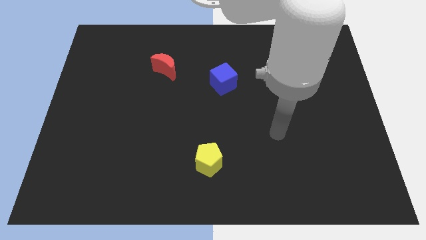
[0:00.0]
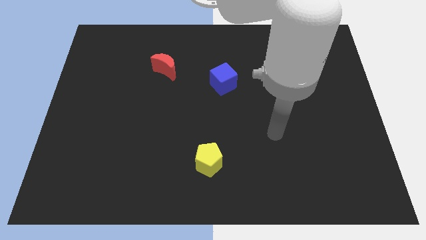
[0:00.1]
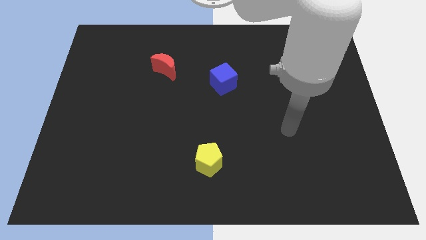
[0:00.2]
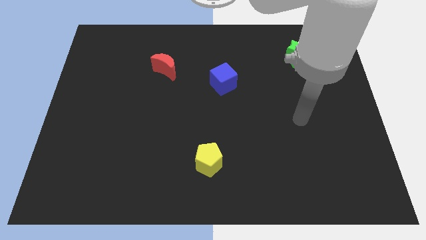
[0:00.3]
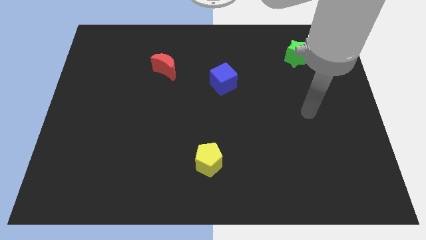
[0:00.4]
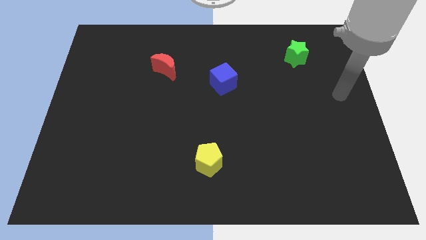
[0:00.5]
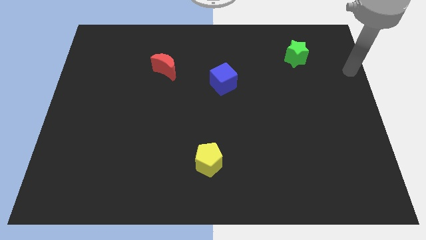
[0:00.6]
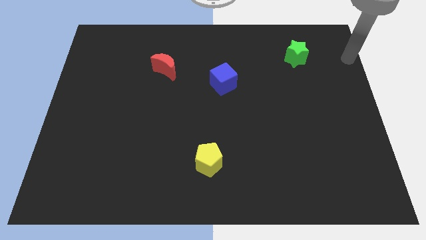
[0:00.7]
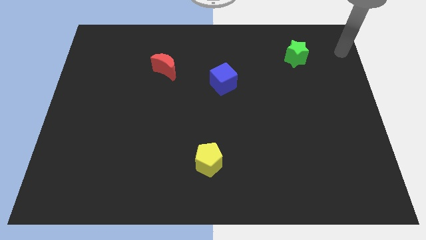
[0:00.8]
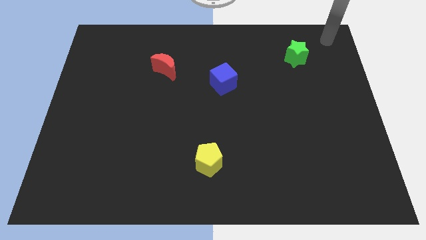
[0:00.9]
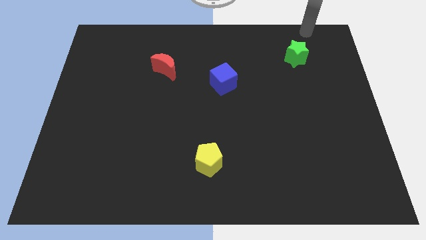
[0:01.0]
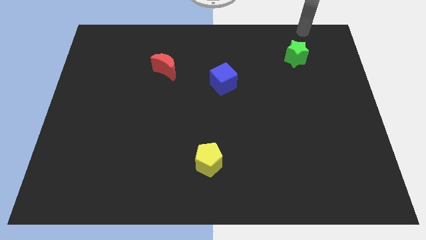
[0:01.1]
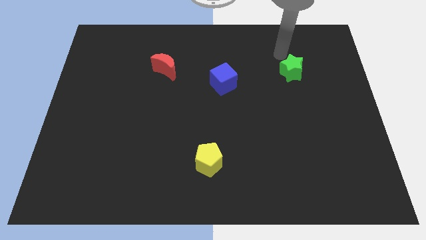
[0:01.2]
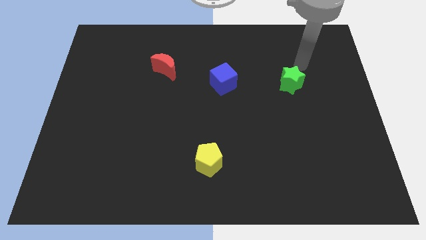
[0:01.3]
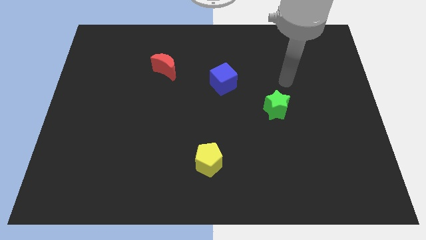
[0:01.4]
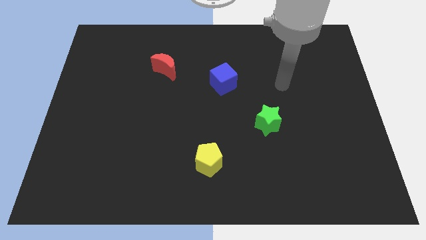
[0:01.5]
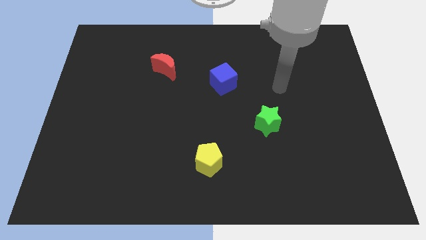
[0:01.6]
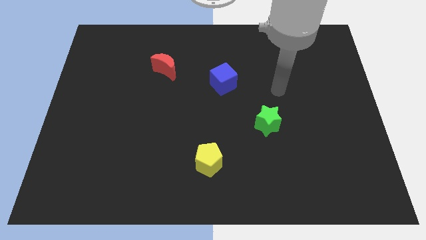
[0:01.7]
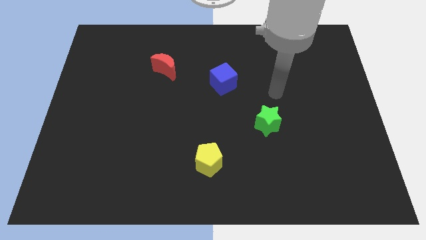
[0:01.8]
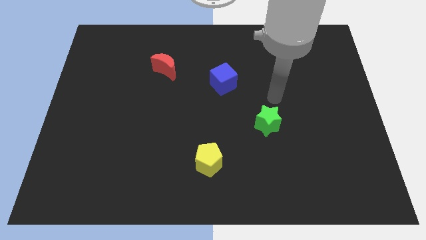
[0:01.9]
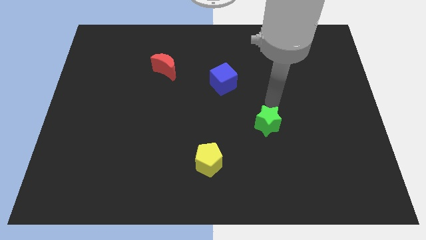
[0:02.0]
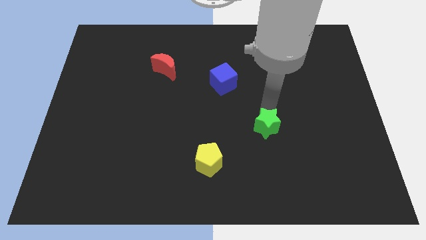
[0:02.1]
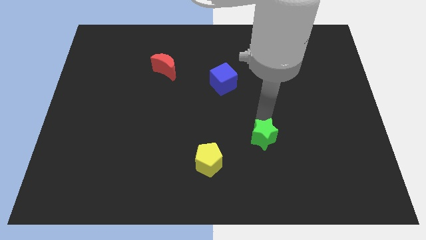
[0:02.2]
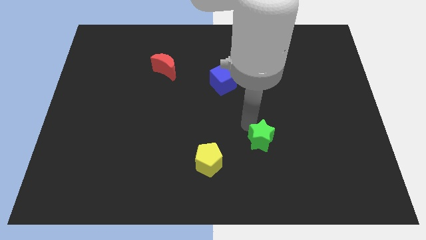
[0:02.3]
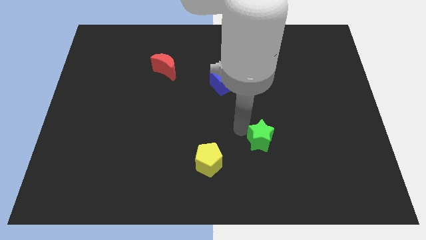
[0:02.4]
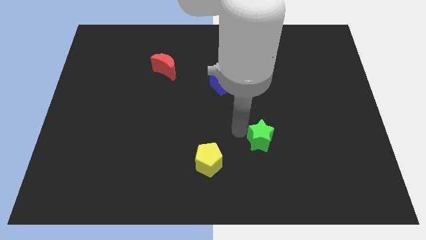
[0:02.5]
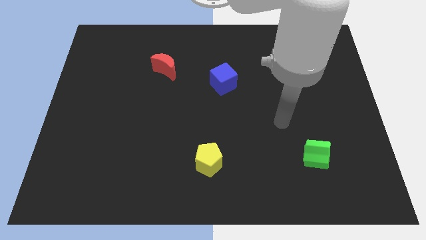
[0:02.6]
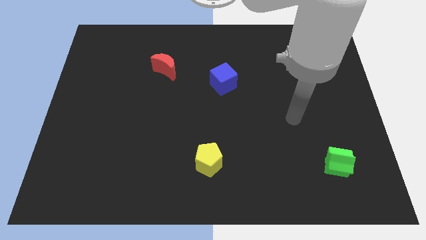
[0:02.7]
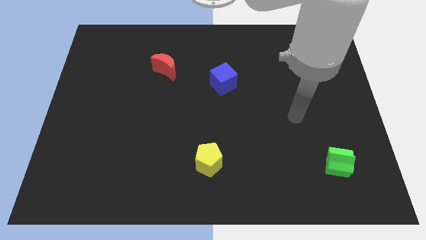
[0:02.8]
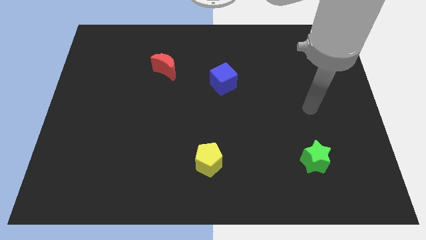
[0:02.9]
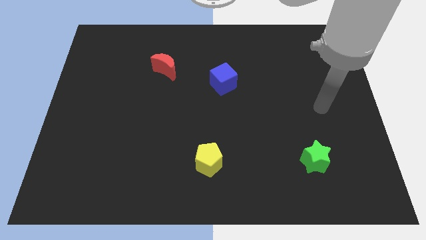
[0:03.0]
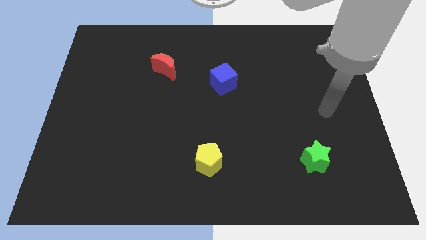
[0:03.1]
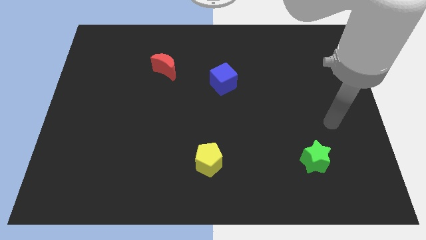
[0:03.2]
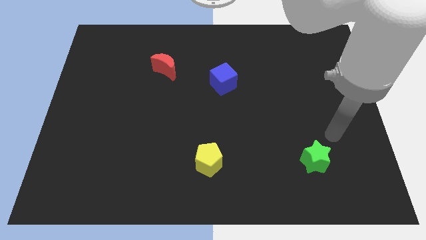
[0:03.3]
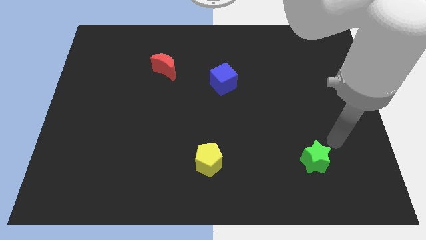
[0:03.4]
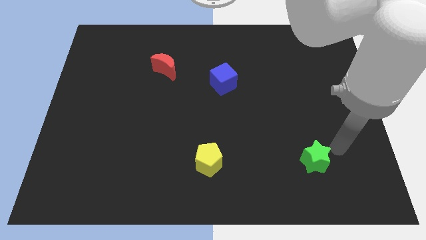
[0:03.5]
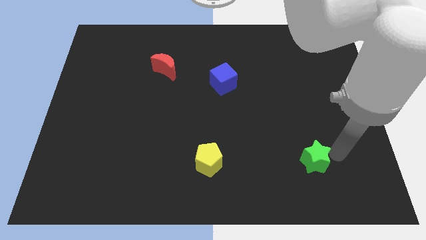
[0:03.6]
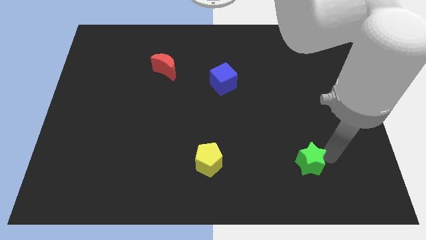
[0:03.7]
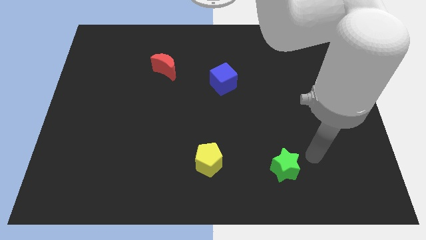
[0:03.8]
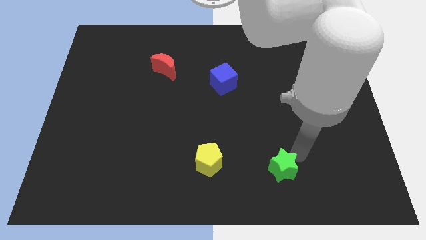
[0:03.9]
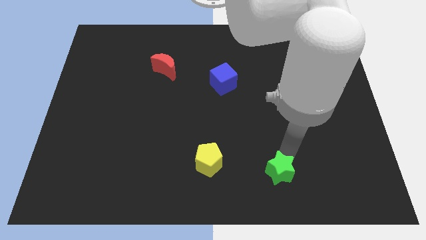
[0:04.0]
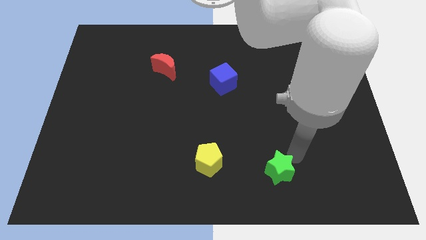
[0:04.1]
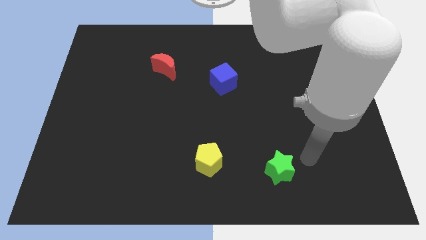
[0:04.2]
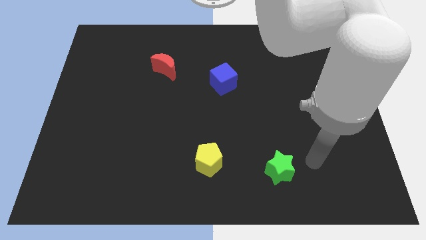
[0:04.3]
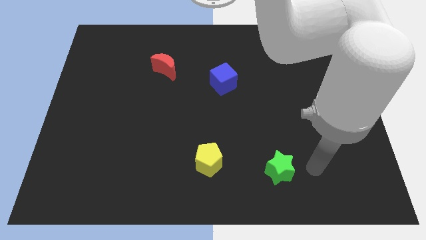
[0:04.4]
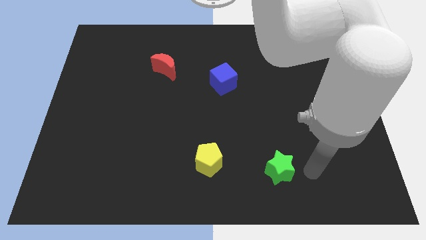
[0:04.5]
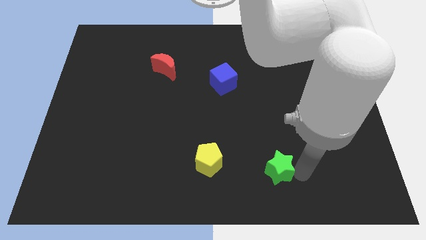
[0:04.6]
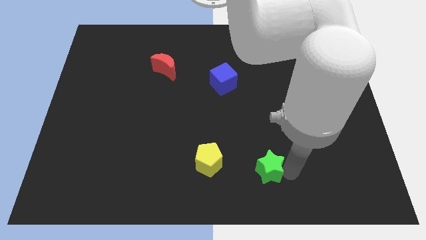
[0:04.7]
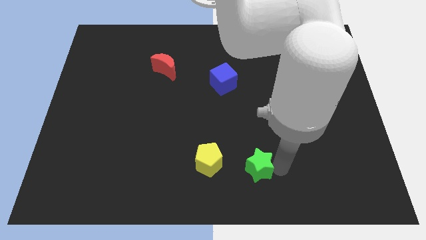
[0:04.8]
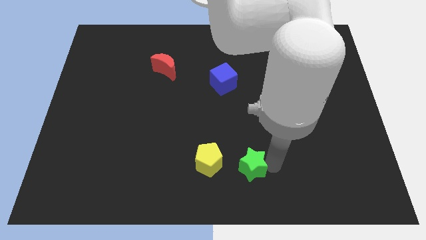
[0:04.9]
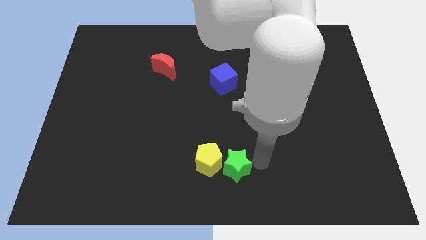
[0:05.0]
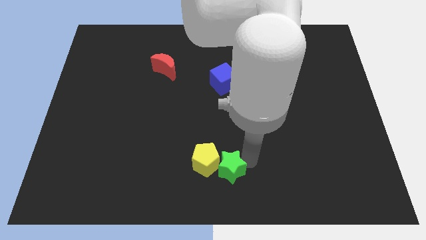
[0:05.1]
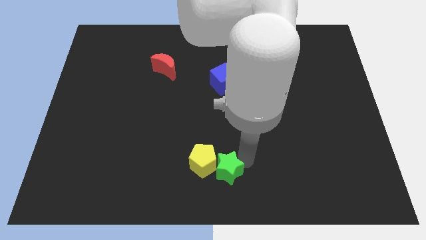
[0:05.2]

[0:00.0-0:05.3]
move the star to the pentagon

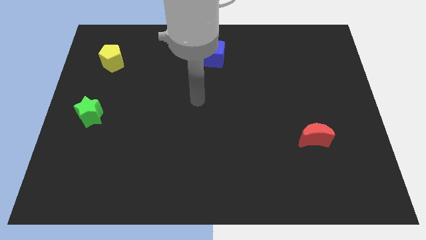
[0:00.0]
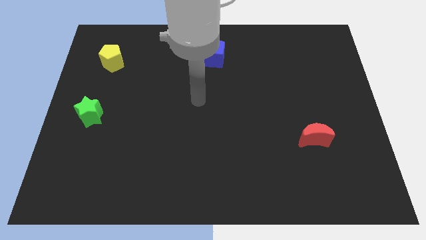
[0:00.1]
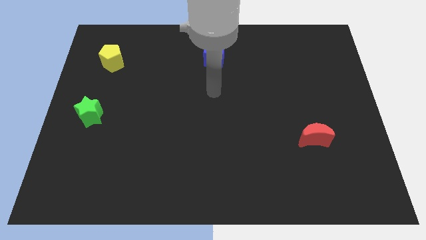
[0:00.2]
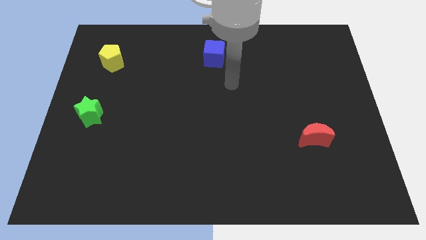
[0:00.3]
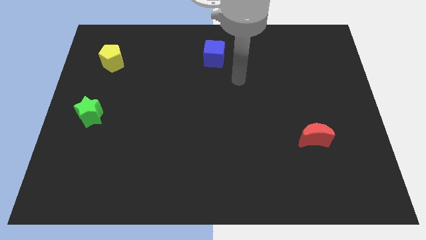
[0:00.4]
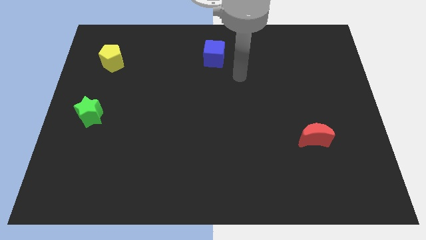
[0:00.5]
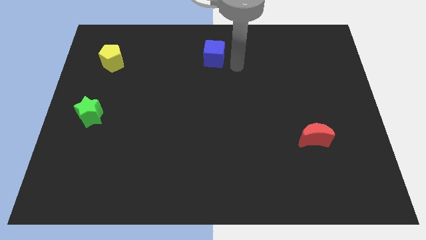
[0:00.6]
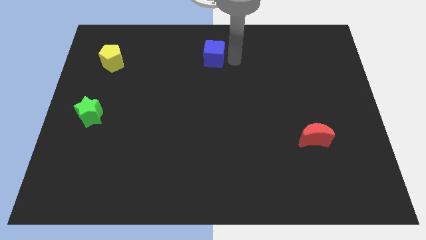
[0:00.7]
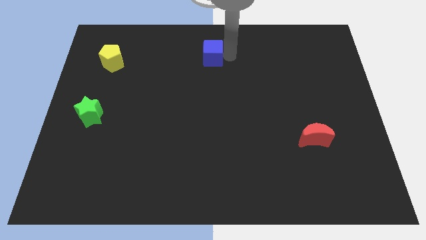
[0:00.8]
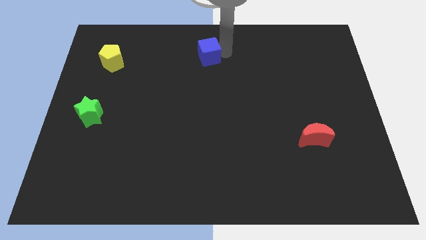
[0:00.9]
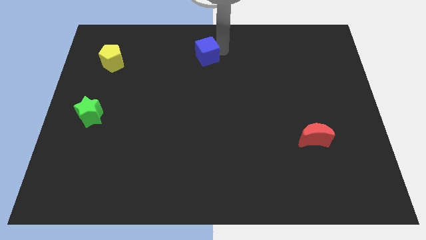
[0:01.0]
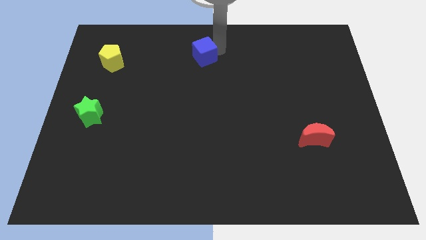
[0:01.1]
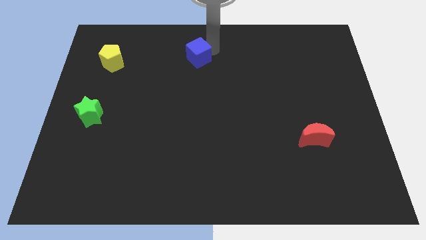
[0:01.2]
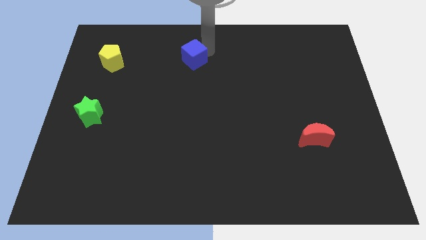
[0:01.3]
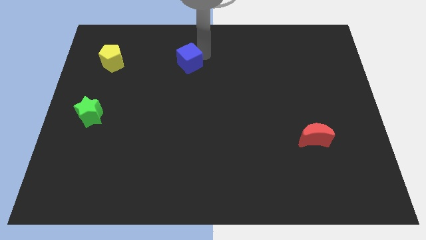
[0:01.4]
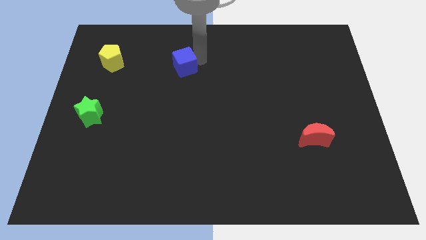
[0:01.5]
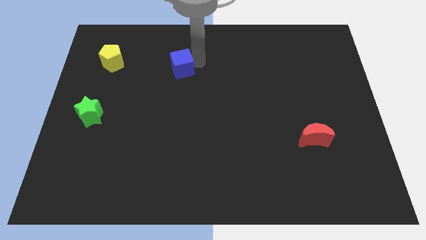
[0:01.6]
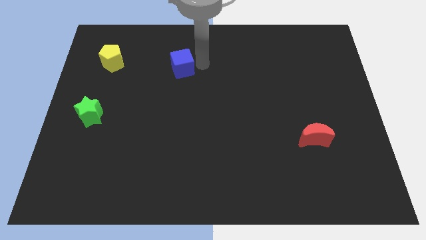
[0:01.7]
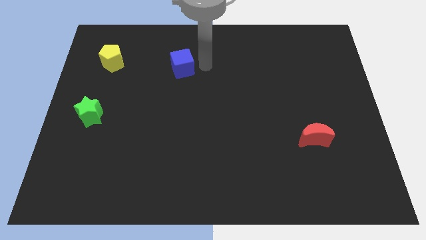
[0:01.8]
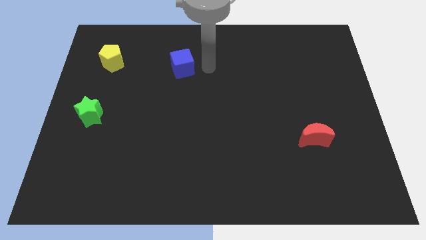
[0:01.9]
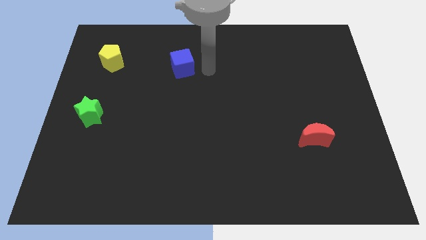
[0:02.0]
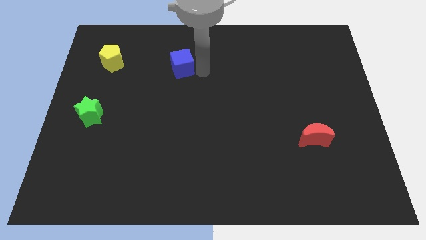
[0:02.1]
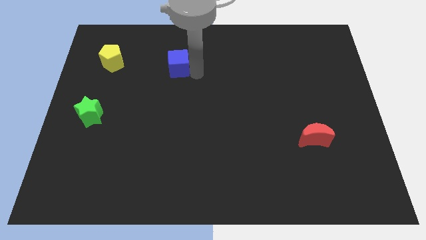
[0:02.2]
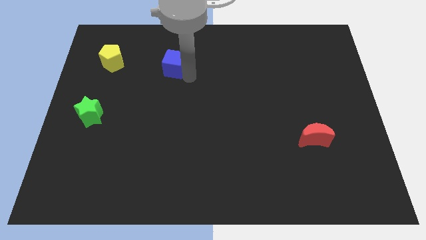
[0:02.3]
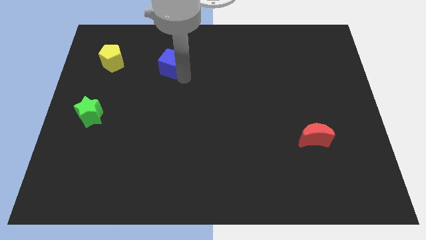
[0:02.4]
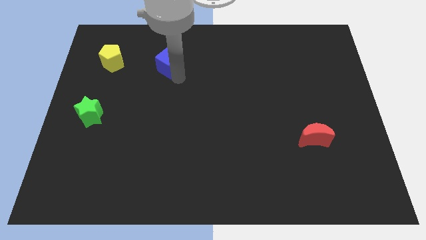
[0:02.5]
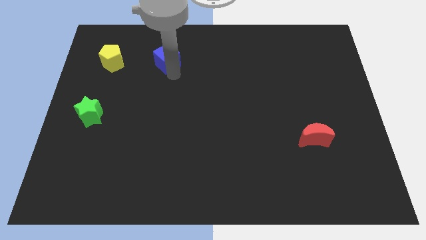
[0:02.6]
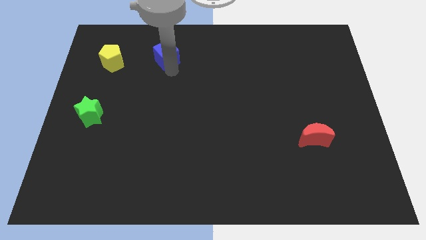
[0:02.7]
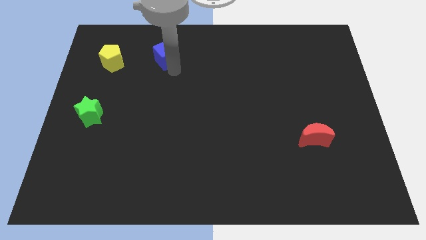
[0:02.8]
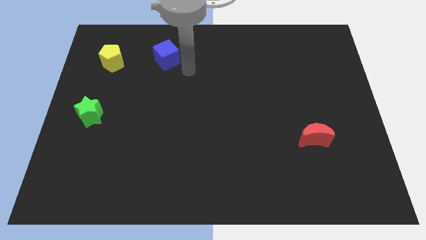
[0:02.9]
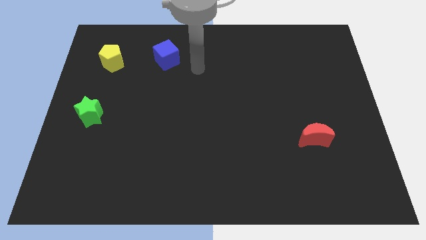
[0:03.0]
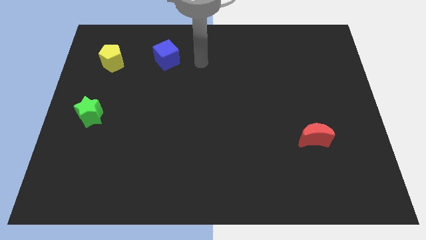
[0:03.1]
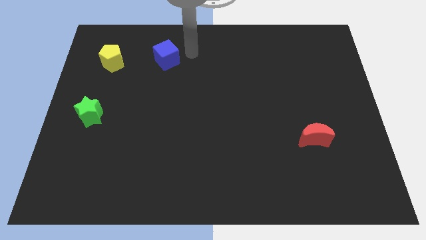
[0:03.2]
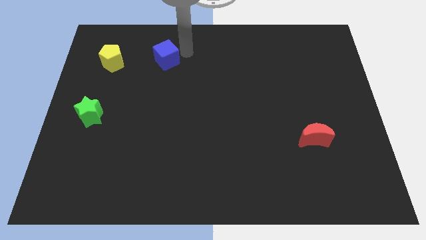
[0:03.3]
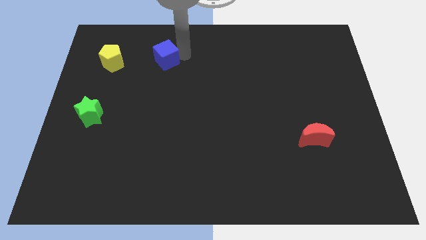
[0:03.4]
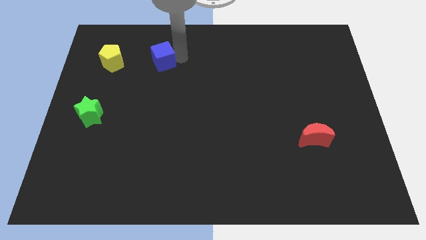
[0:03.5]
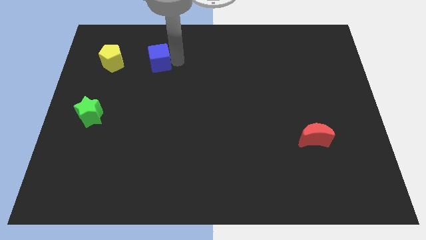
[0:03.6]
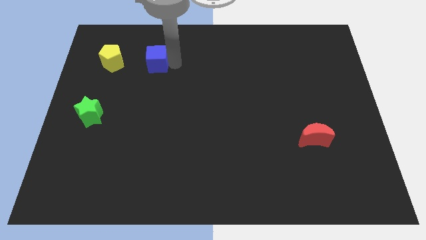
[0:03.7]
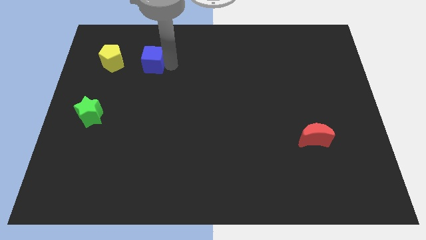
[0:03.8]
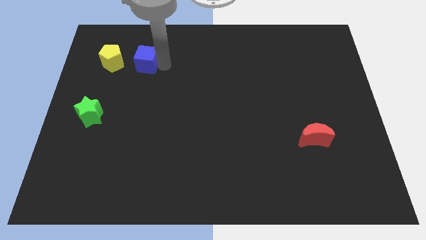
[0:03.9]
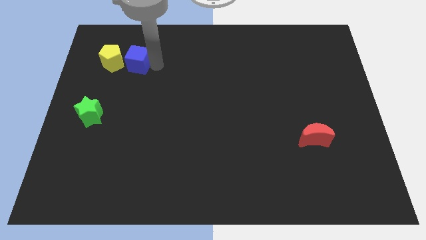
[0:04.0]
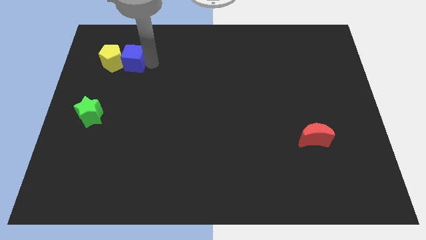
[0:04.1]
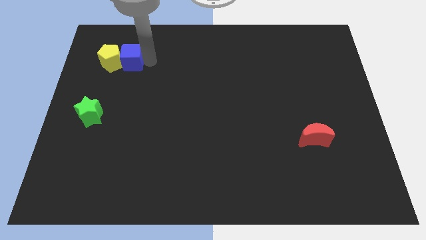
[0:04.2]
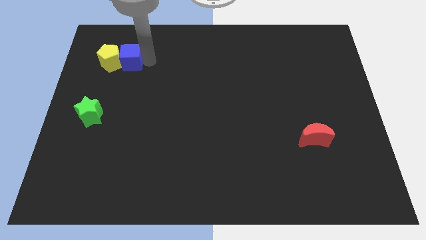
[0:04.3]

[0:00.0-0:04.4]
slide the blue block to the pentagon
